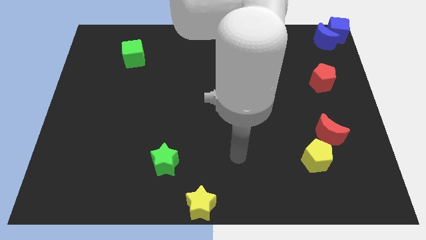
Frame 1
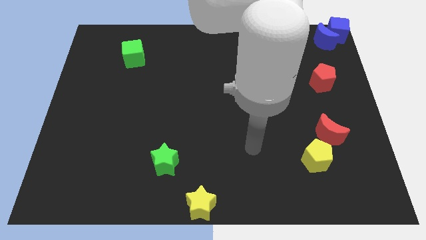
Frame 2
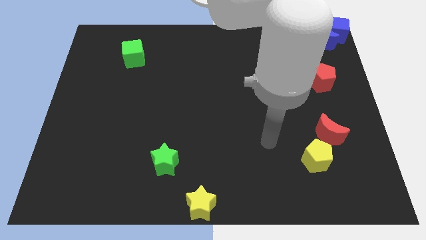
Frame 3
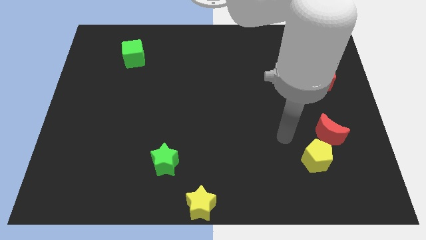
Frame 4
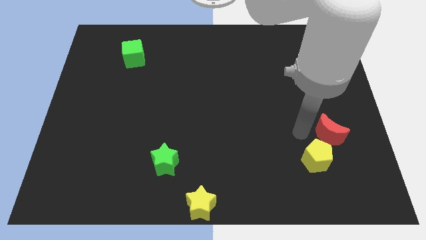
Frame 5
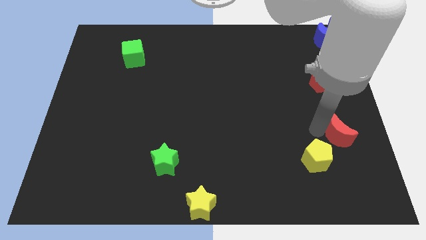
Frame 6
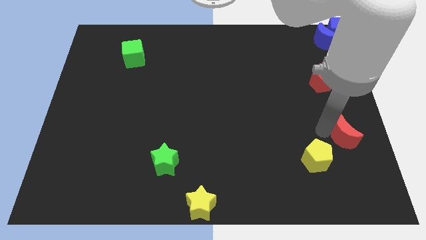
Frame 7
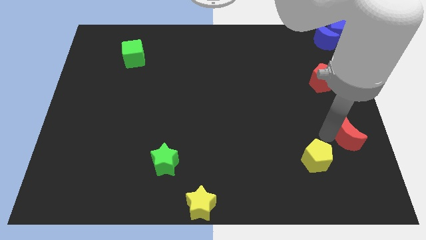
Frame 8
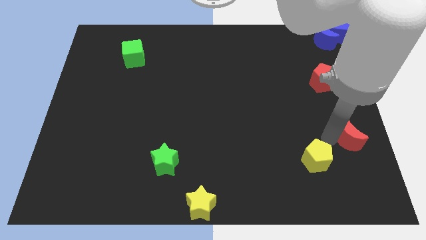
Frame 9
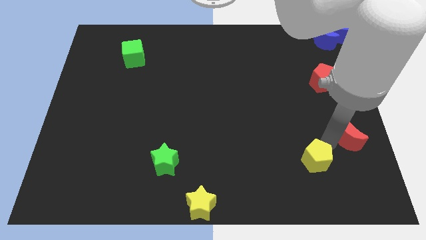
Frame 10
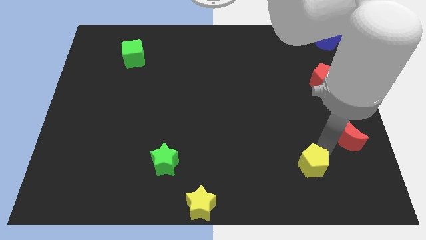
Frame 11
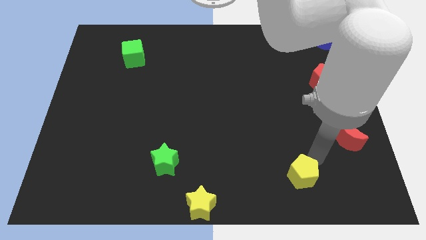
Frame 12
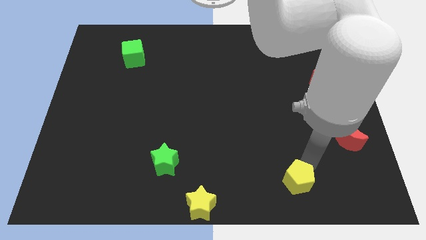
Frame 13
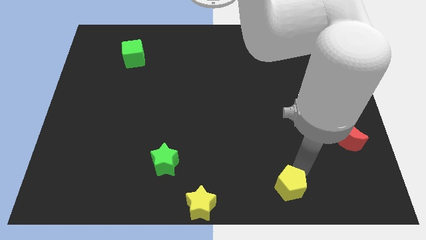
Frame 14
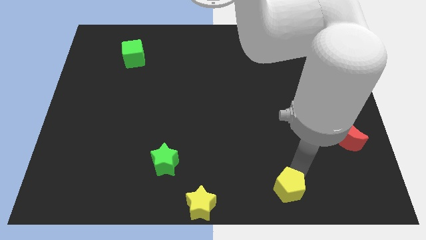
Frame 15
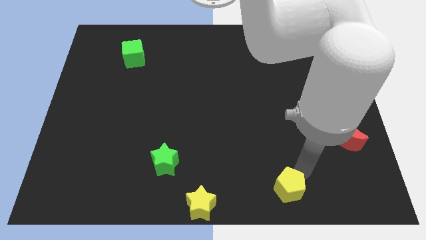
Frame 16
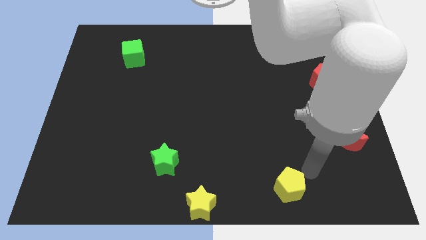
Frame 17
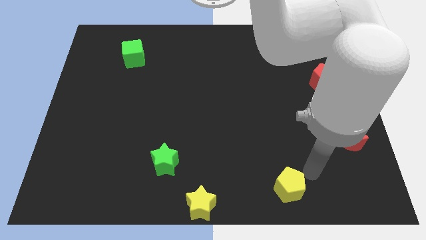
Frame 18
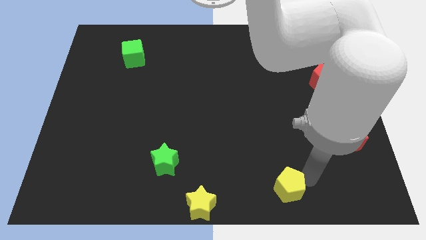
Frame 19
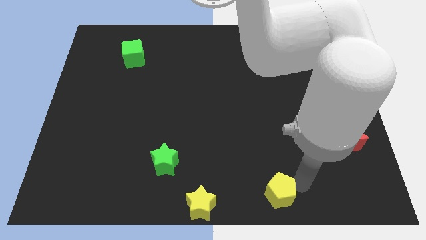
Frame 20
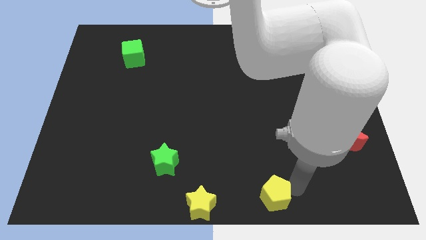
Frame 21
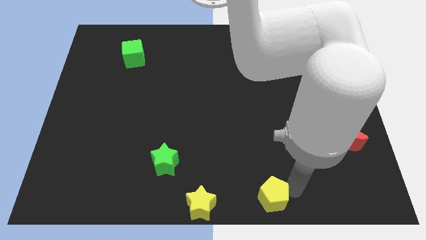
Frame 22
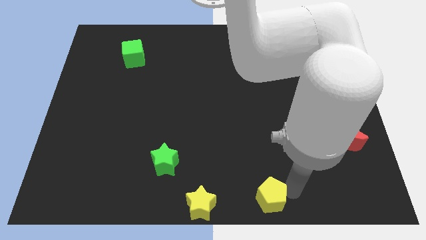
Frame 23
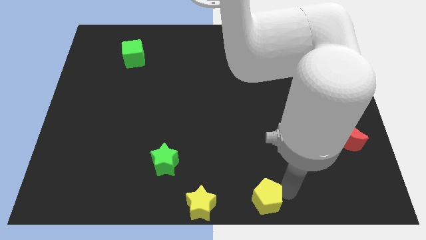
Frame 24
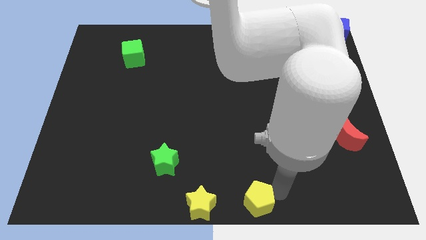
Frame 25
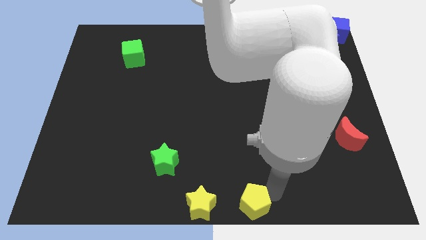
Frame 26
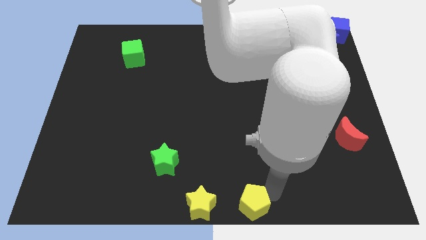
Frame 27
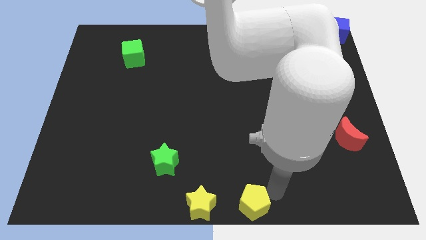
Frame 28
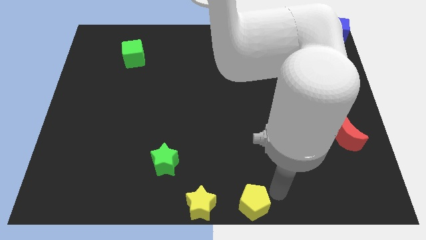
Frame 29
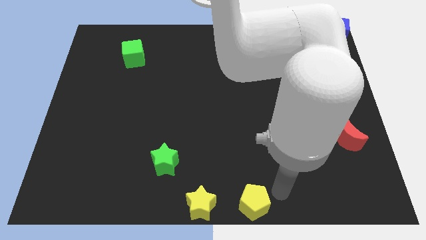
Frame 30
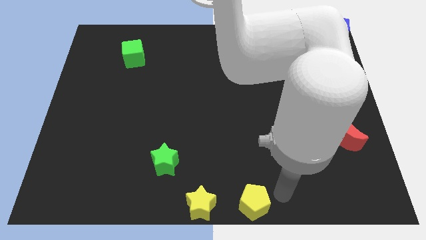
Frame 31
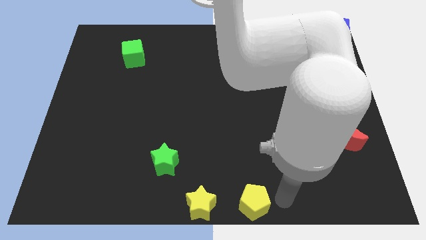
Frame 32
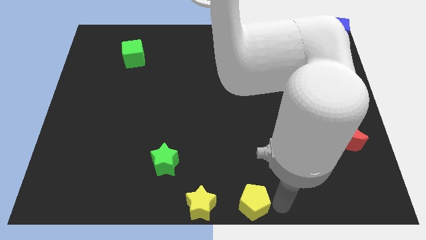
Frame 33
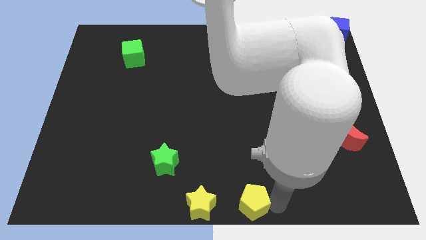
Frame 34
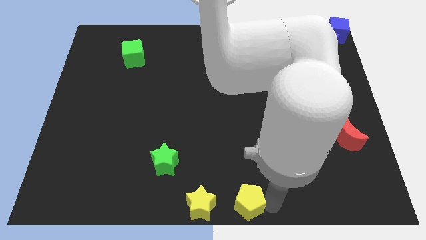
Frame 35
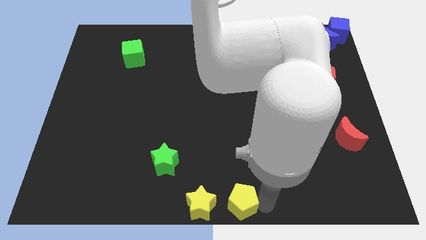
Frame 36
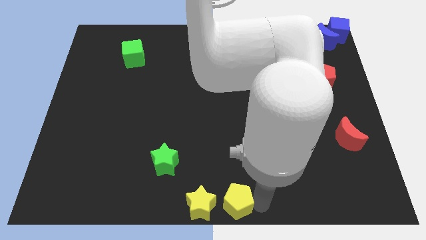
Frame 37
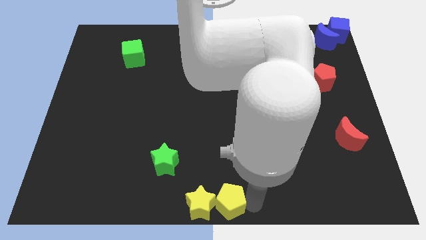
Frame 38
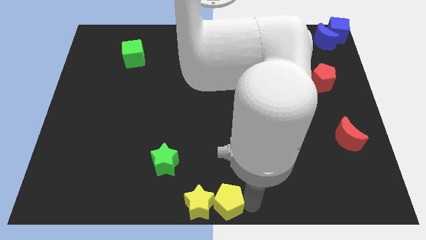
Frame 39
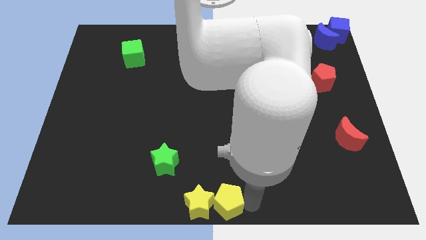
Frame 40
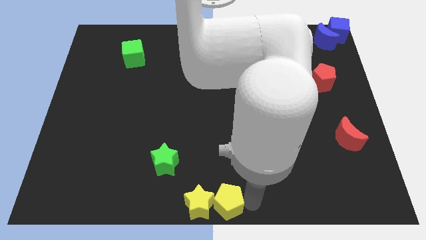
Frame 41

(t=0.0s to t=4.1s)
push the yellow pentagon towards the bottom center of the board

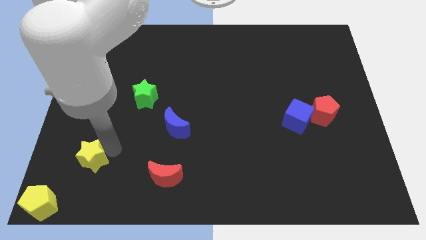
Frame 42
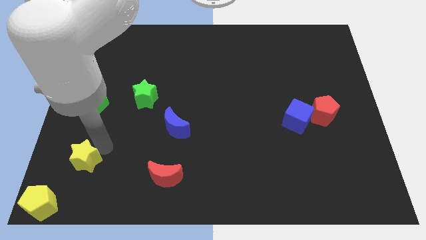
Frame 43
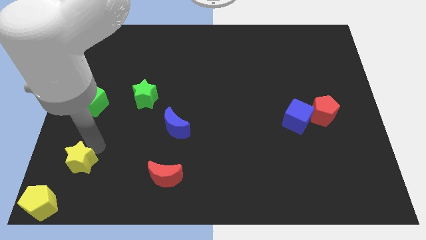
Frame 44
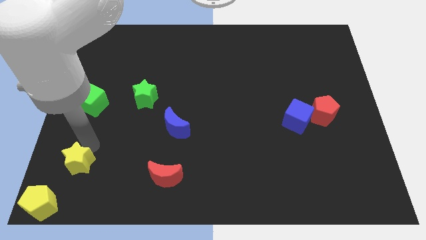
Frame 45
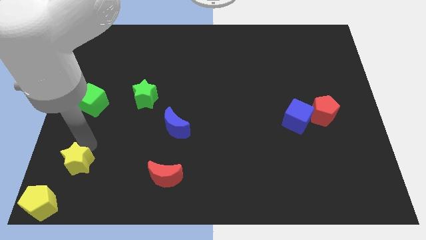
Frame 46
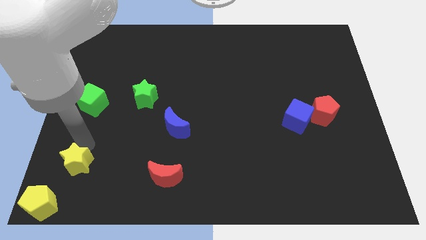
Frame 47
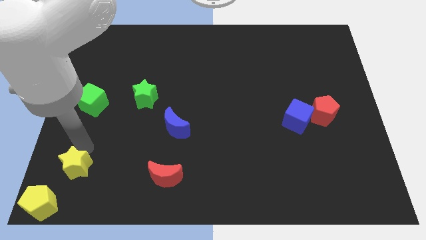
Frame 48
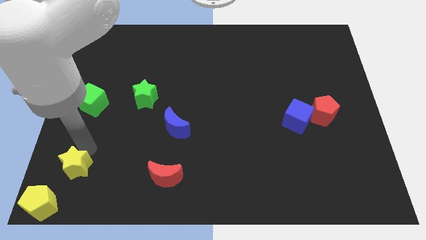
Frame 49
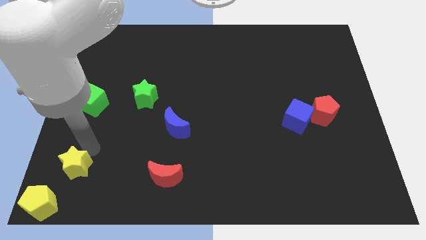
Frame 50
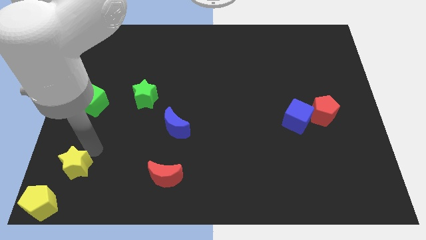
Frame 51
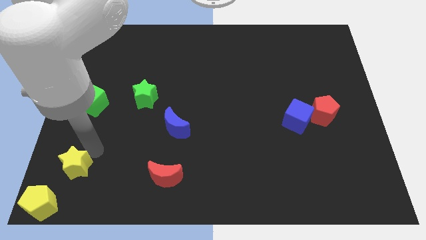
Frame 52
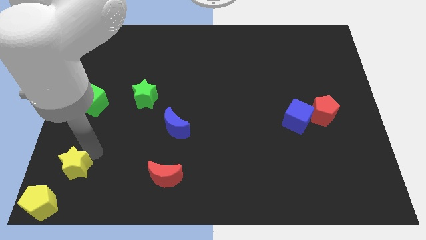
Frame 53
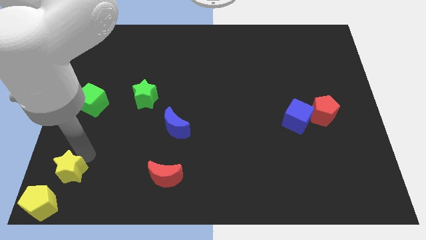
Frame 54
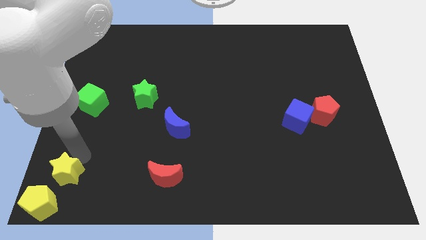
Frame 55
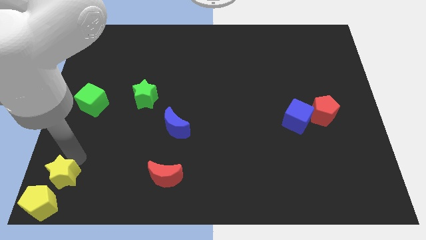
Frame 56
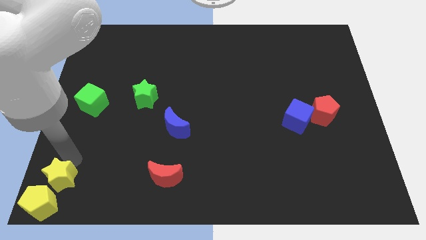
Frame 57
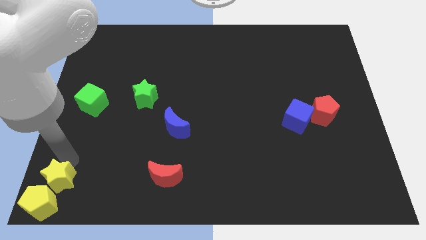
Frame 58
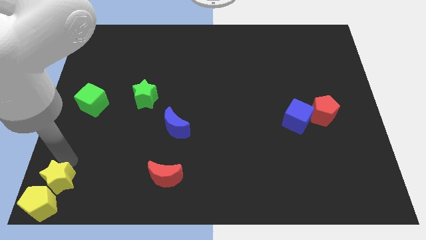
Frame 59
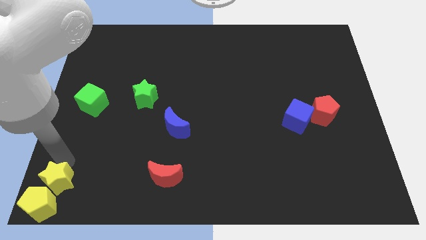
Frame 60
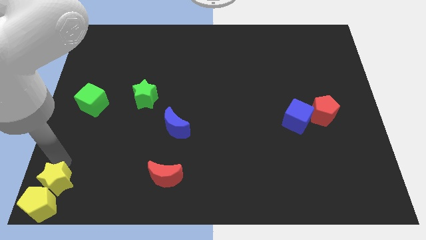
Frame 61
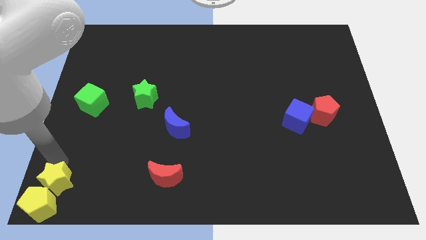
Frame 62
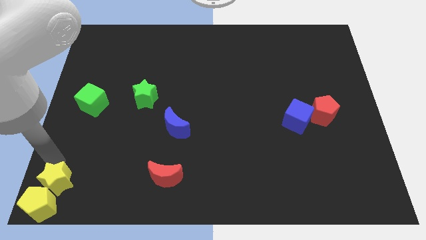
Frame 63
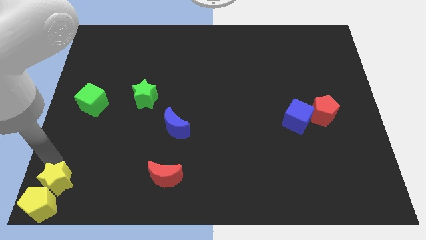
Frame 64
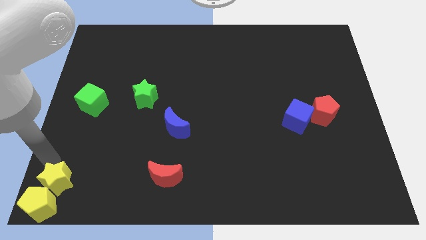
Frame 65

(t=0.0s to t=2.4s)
put yellow blocks together

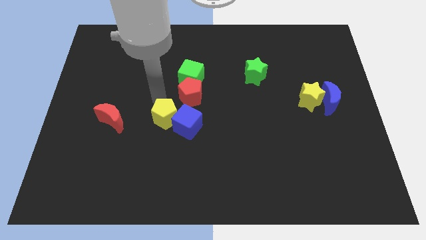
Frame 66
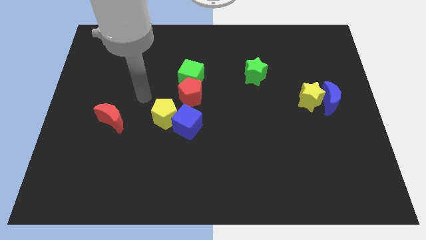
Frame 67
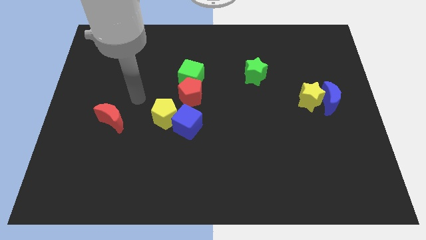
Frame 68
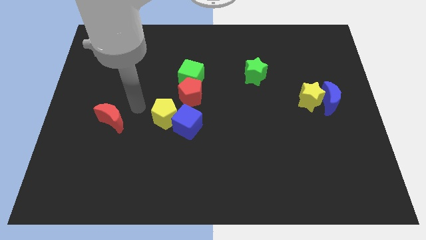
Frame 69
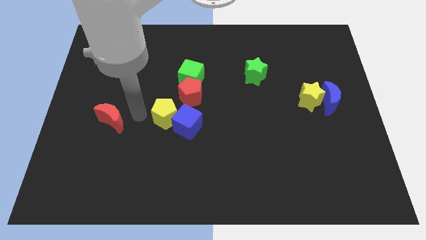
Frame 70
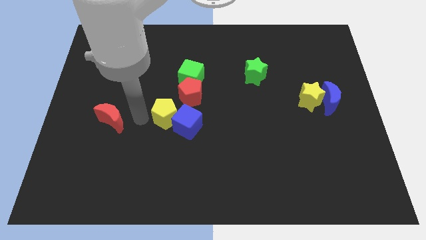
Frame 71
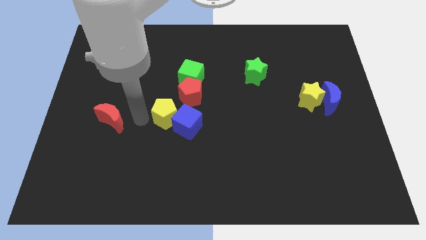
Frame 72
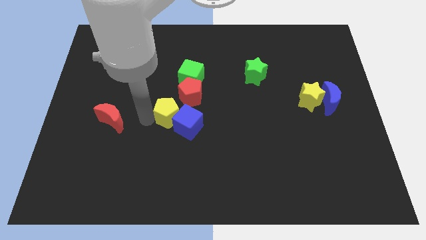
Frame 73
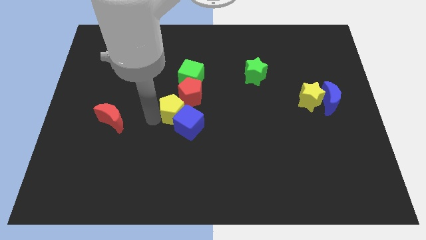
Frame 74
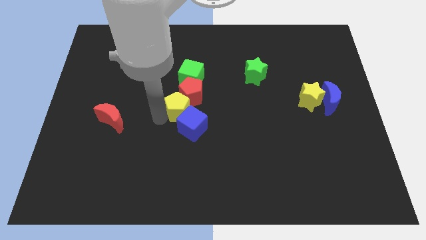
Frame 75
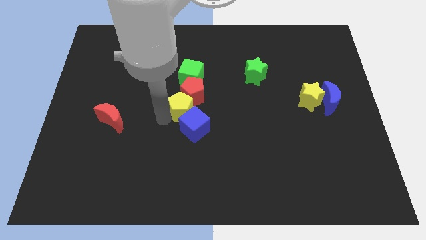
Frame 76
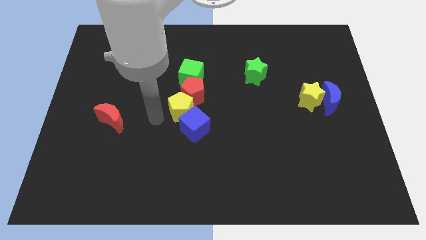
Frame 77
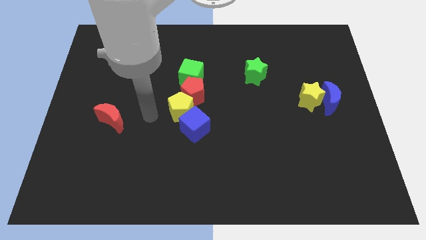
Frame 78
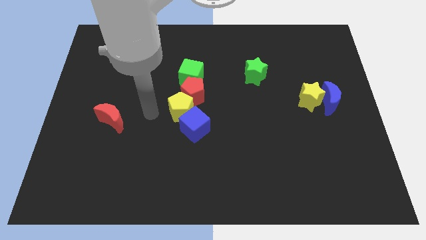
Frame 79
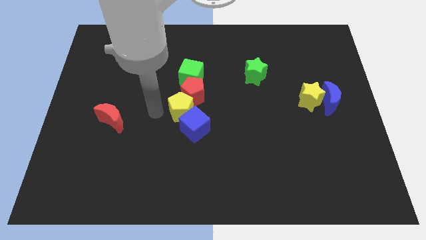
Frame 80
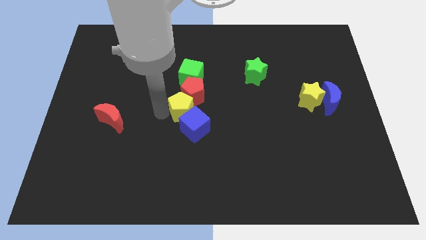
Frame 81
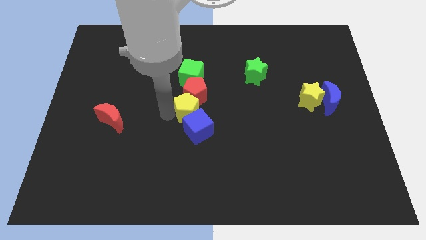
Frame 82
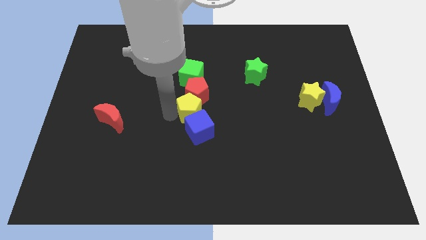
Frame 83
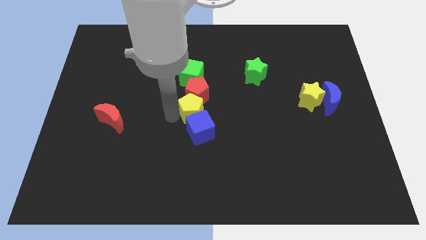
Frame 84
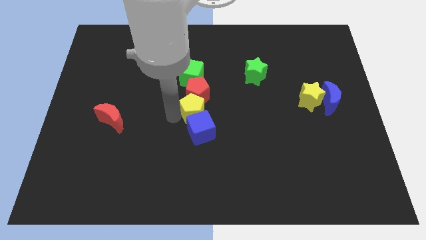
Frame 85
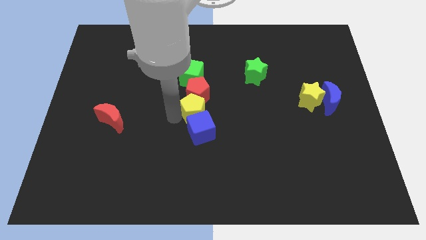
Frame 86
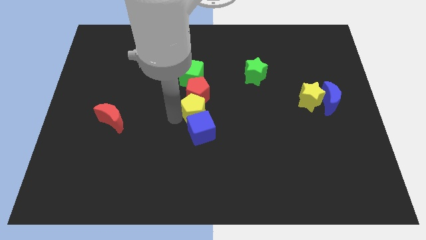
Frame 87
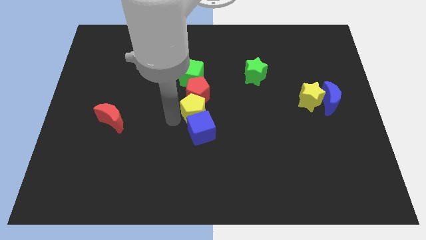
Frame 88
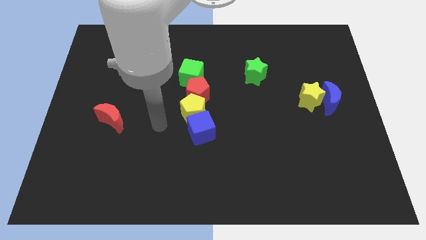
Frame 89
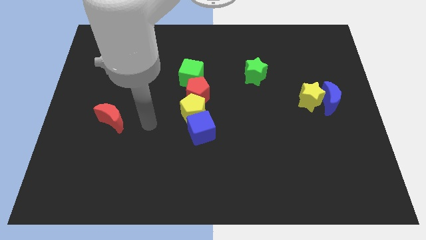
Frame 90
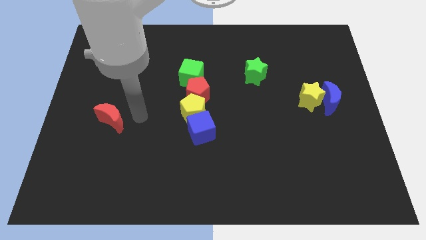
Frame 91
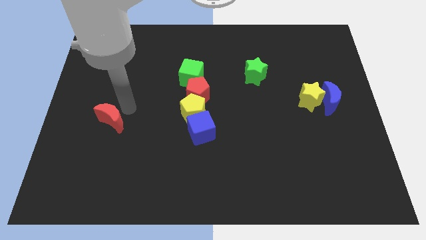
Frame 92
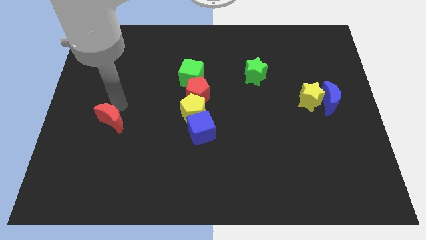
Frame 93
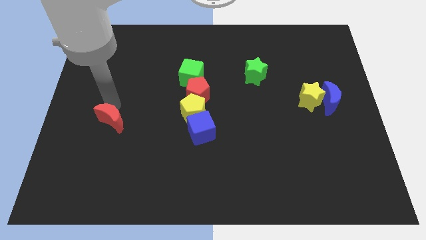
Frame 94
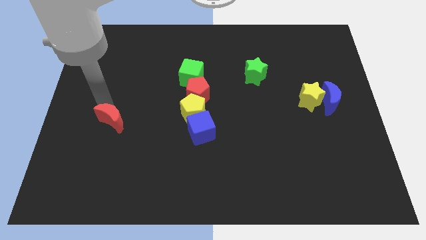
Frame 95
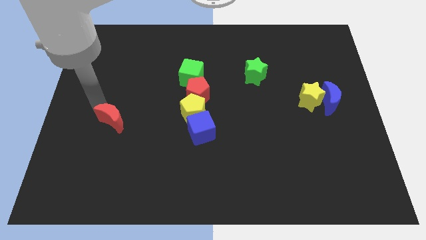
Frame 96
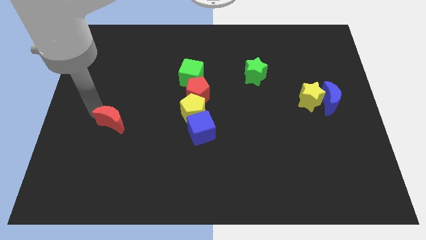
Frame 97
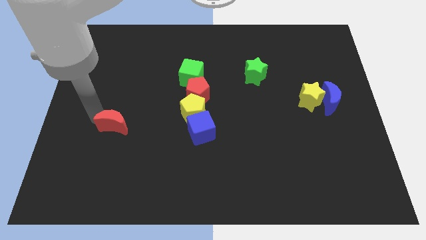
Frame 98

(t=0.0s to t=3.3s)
move your arm to the left side of the red crescent
